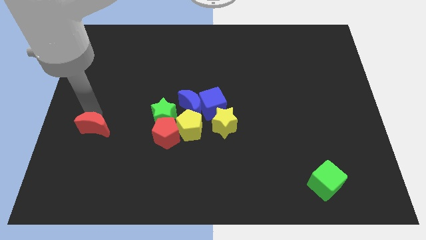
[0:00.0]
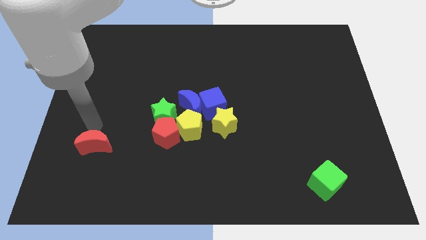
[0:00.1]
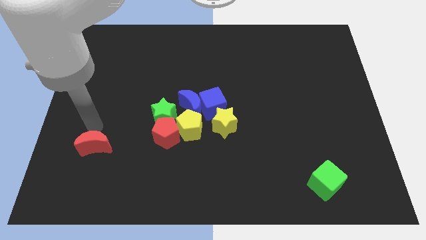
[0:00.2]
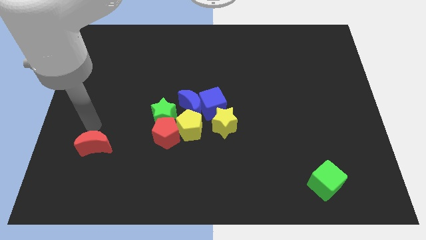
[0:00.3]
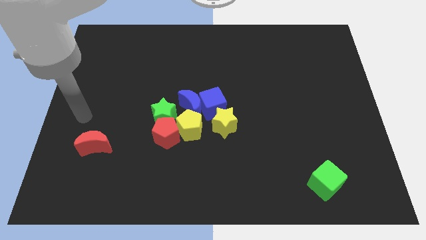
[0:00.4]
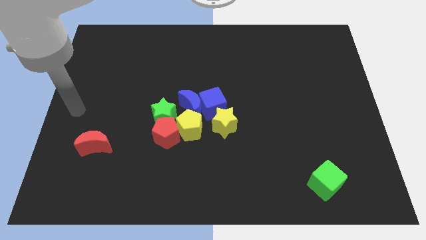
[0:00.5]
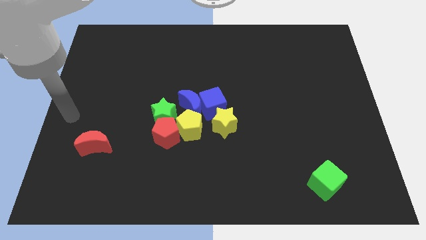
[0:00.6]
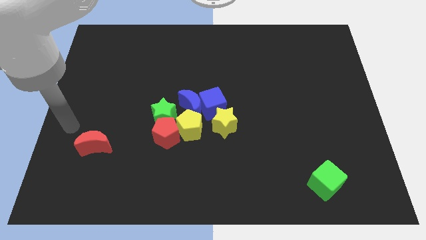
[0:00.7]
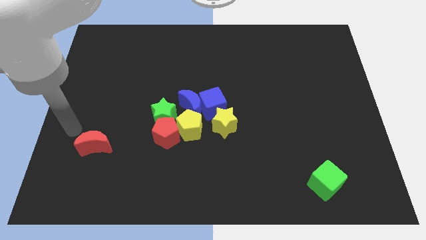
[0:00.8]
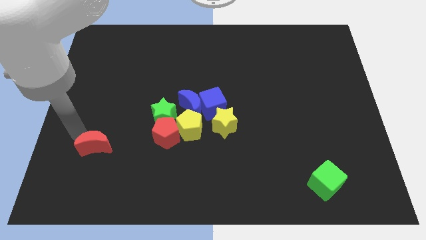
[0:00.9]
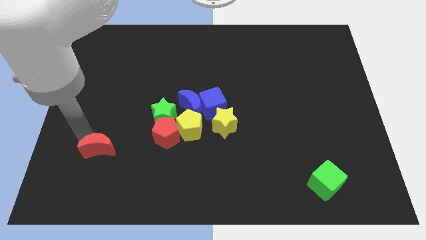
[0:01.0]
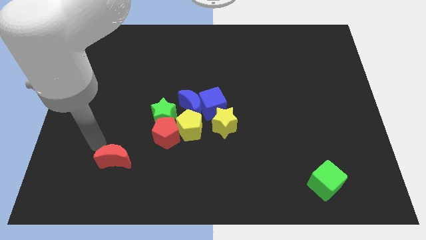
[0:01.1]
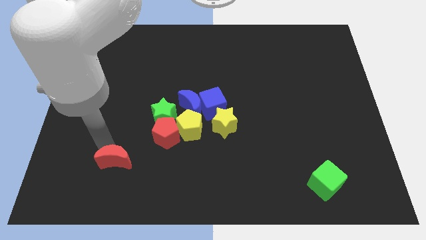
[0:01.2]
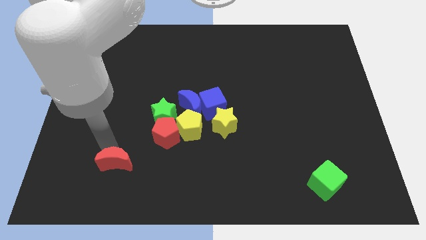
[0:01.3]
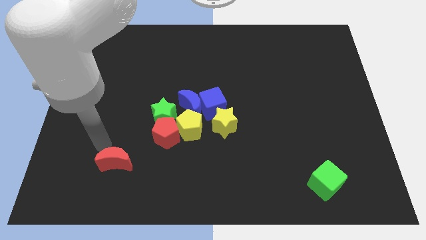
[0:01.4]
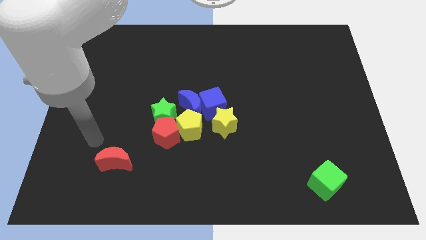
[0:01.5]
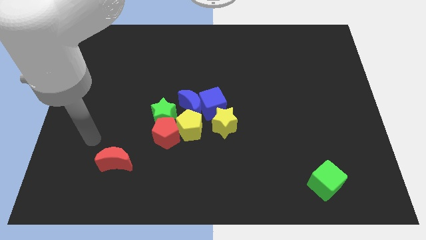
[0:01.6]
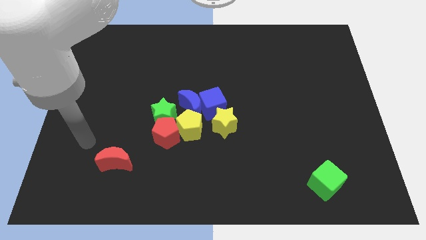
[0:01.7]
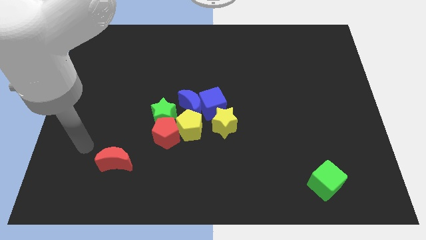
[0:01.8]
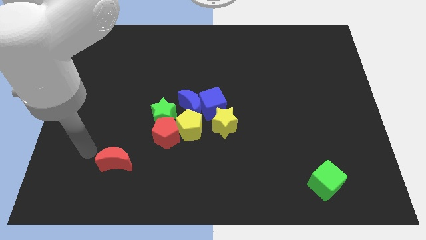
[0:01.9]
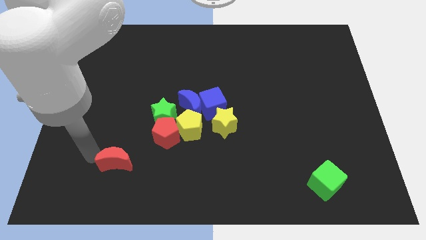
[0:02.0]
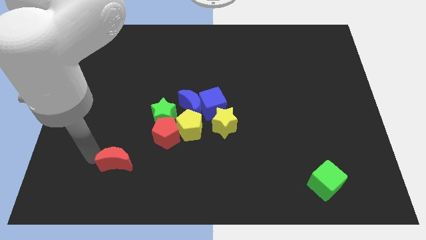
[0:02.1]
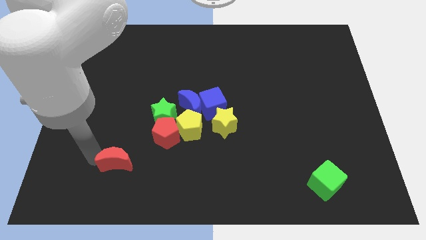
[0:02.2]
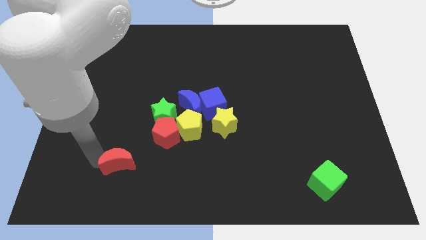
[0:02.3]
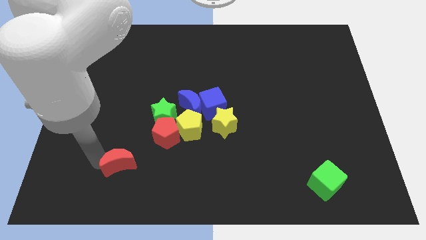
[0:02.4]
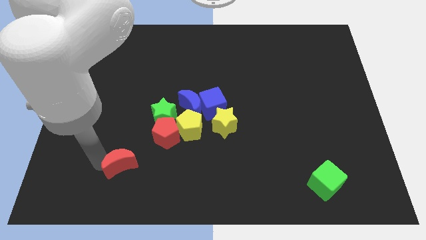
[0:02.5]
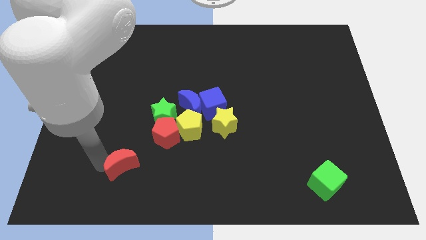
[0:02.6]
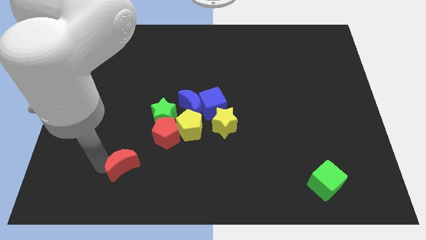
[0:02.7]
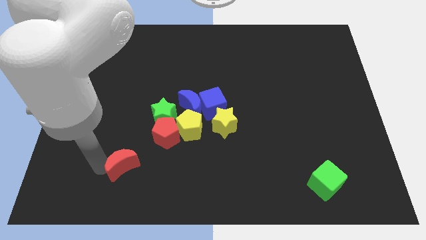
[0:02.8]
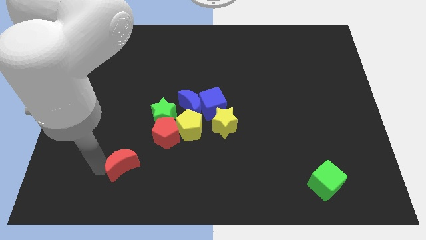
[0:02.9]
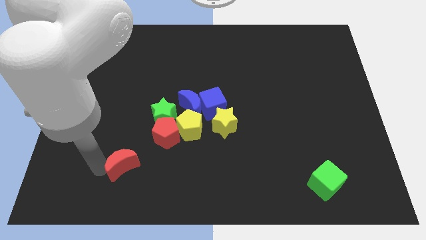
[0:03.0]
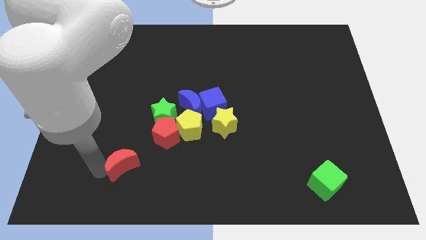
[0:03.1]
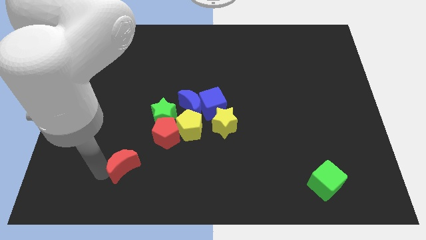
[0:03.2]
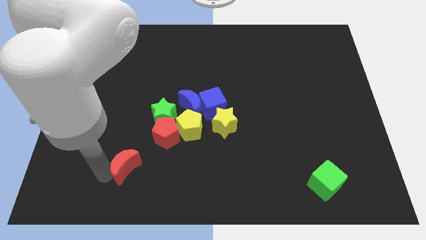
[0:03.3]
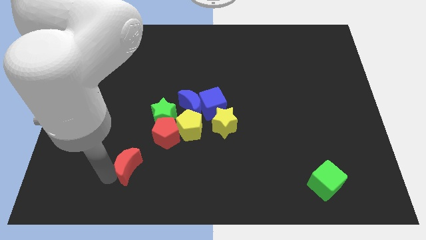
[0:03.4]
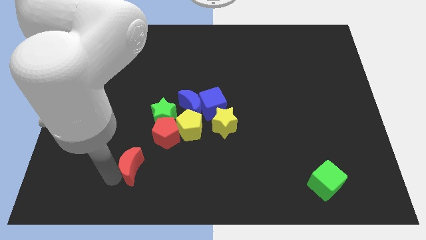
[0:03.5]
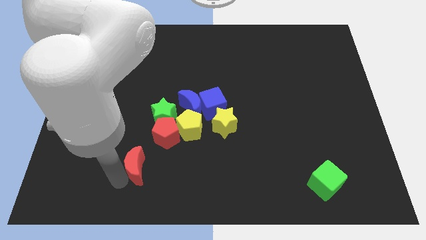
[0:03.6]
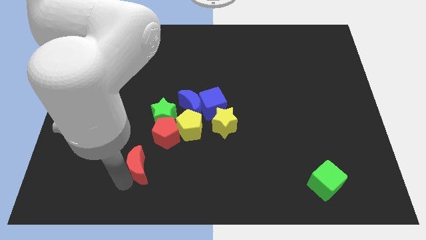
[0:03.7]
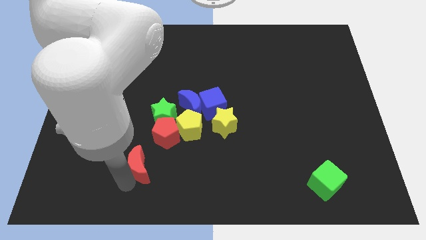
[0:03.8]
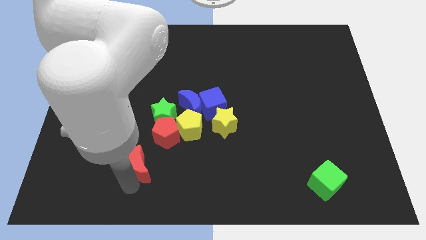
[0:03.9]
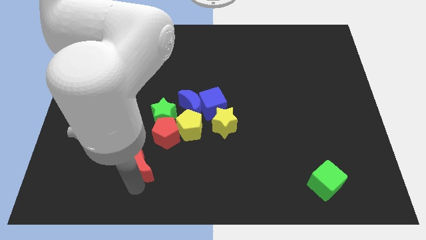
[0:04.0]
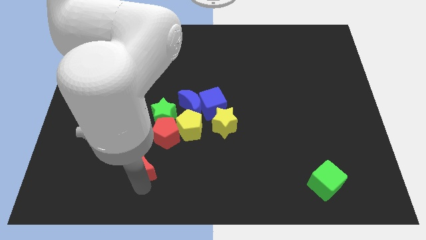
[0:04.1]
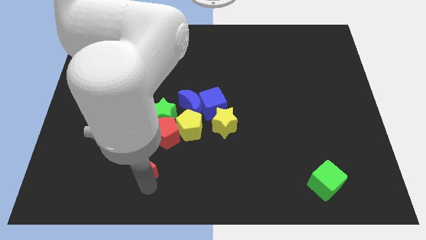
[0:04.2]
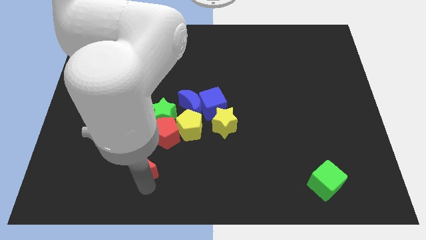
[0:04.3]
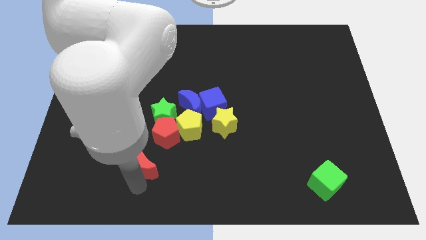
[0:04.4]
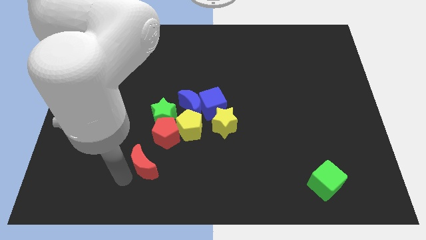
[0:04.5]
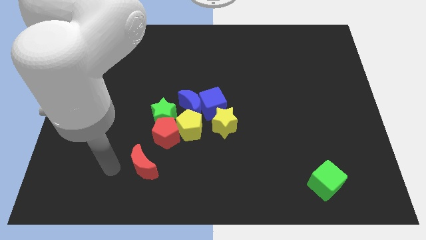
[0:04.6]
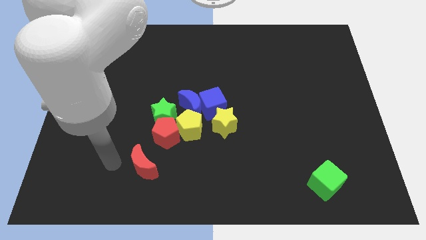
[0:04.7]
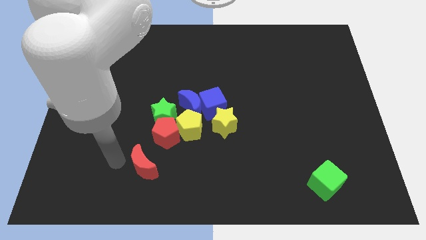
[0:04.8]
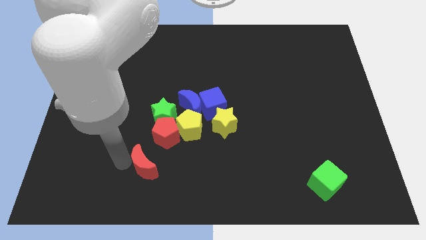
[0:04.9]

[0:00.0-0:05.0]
place the red moon diagonally to the bottom left of the red pentagon

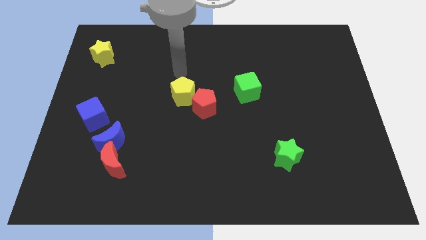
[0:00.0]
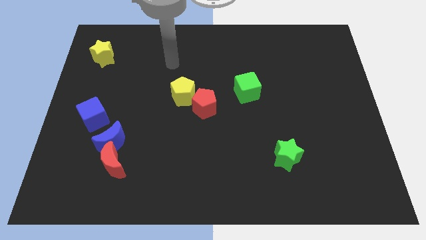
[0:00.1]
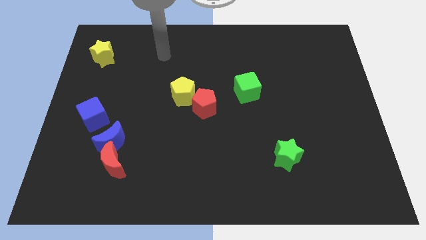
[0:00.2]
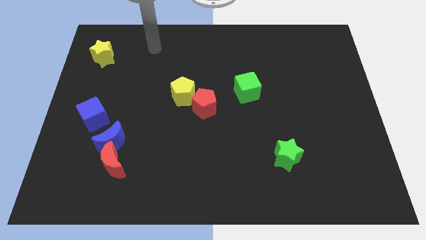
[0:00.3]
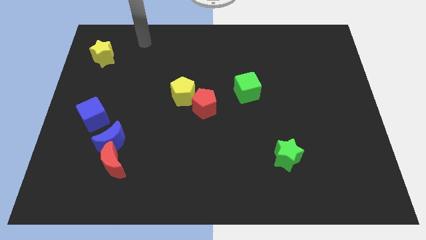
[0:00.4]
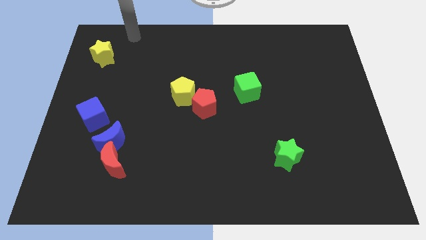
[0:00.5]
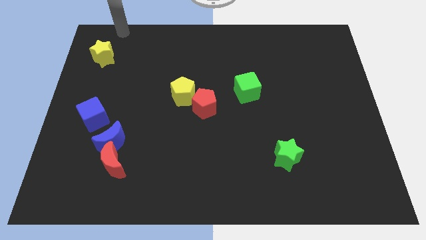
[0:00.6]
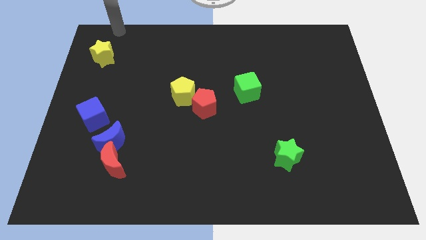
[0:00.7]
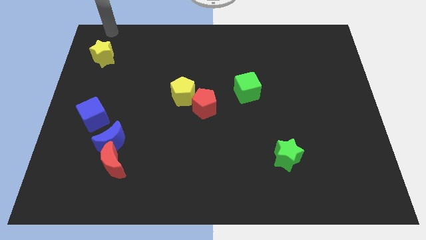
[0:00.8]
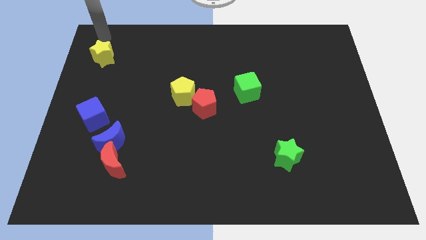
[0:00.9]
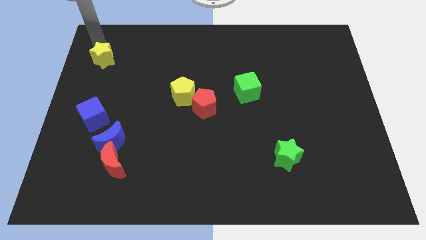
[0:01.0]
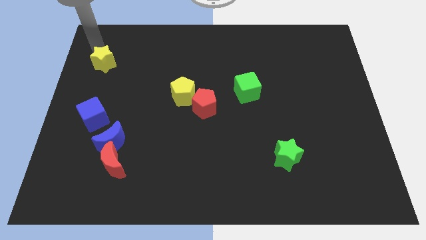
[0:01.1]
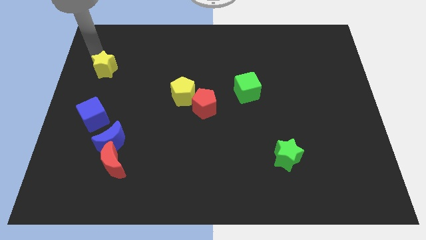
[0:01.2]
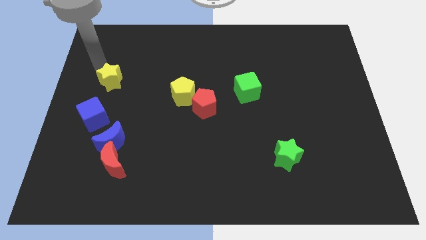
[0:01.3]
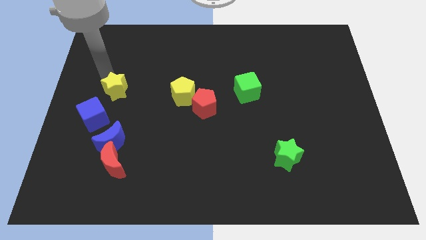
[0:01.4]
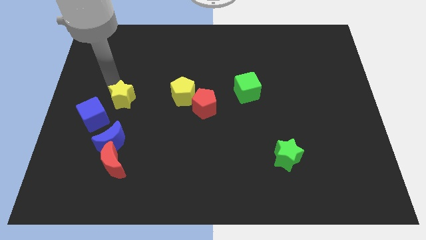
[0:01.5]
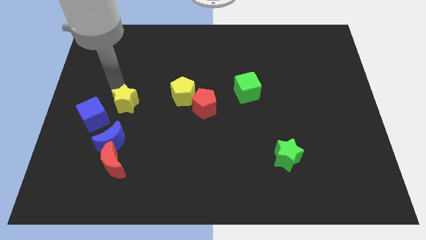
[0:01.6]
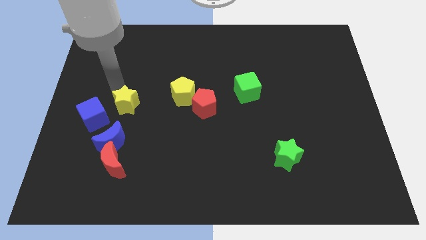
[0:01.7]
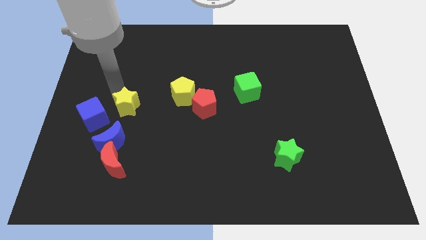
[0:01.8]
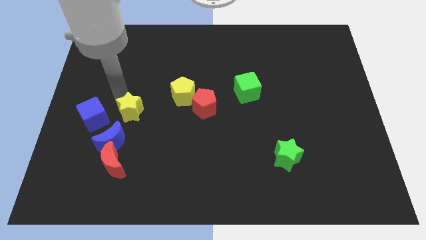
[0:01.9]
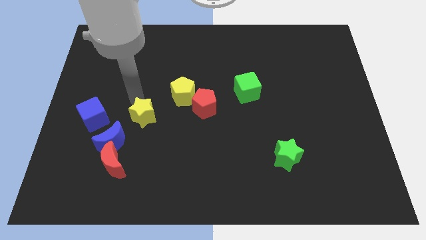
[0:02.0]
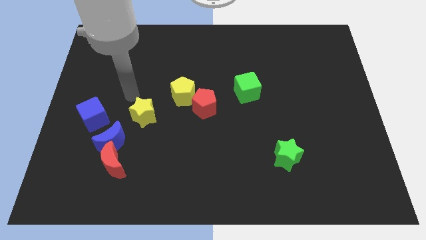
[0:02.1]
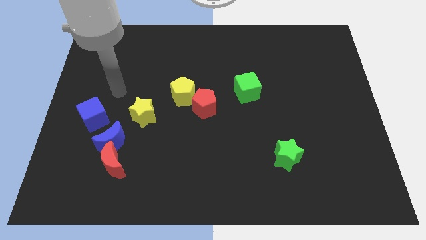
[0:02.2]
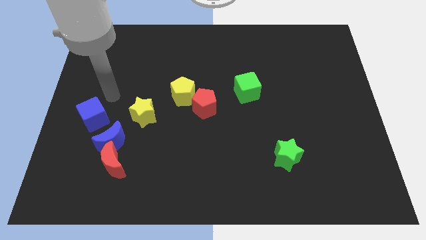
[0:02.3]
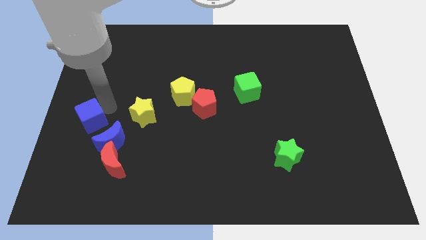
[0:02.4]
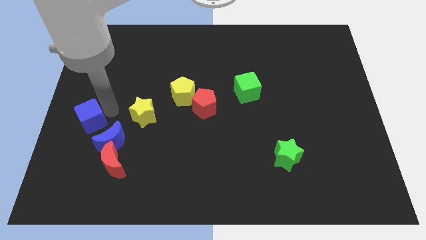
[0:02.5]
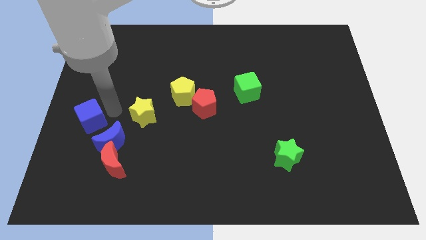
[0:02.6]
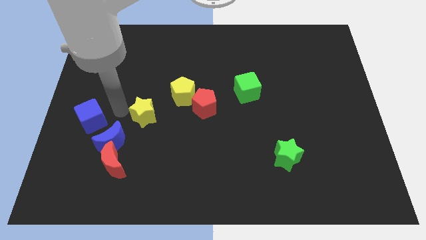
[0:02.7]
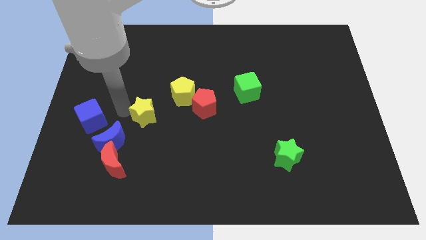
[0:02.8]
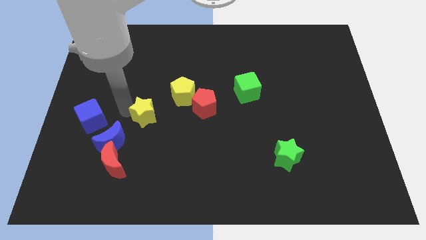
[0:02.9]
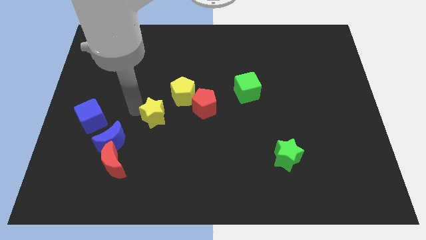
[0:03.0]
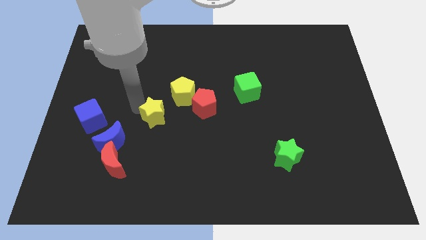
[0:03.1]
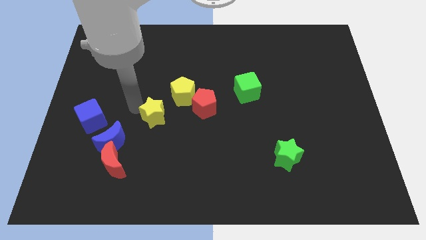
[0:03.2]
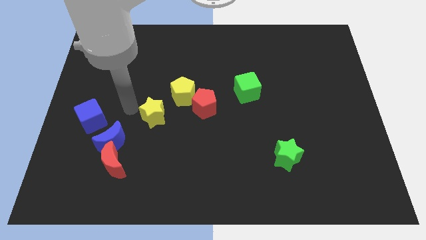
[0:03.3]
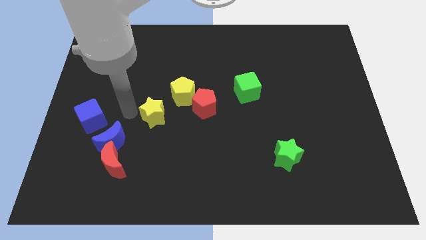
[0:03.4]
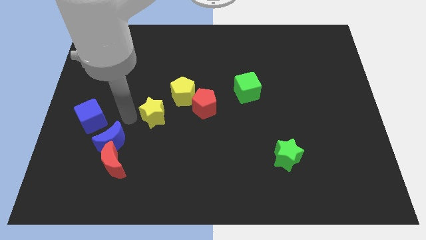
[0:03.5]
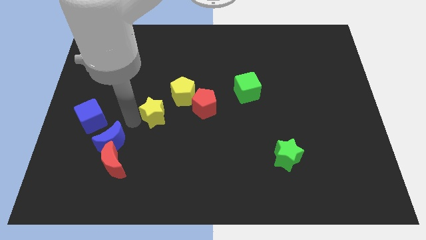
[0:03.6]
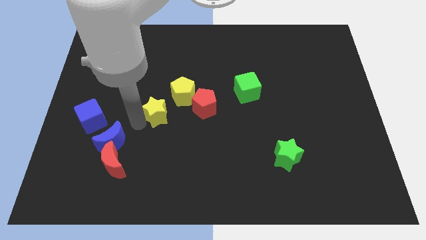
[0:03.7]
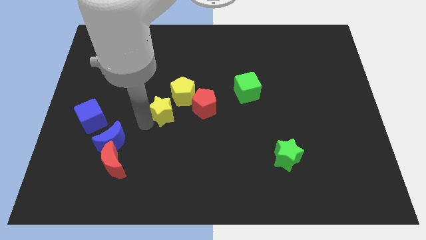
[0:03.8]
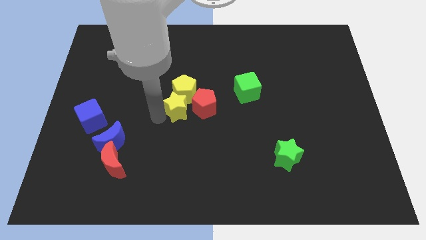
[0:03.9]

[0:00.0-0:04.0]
push the yellow star to the bottom of the yellow pentagon
